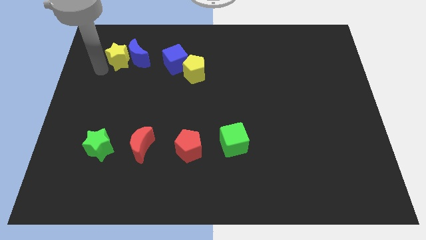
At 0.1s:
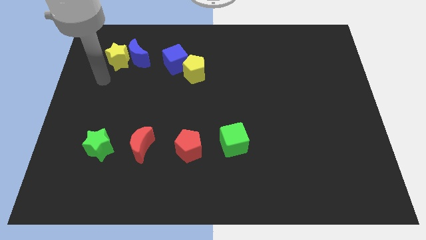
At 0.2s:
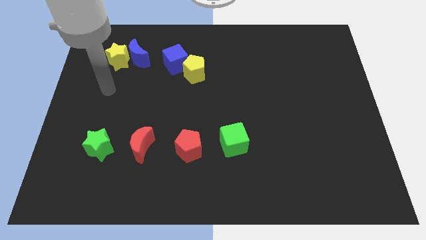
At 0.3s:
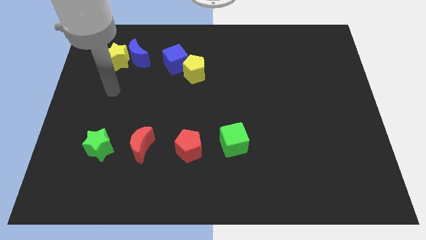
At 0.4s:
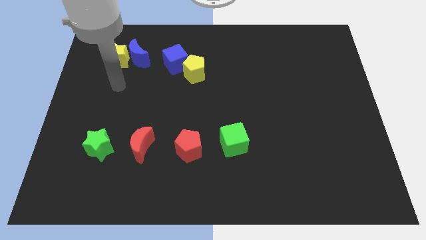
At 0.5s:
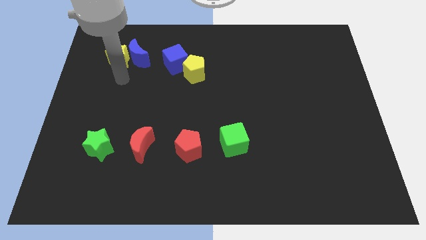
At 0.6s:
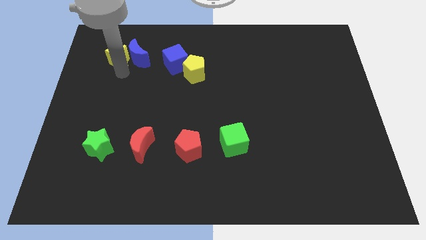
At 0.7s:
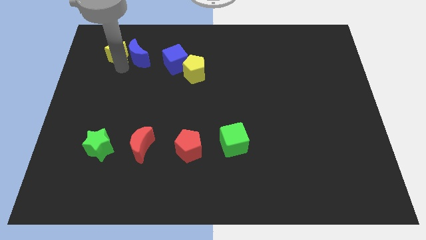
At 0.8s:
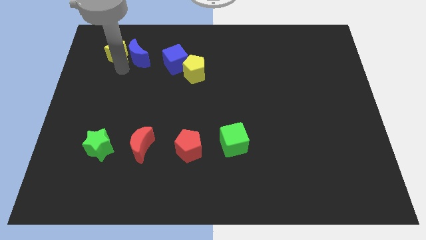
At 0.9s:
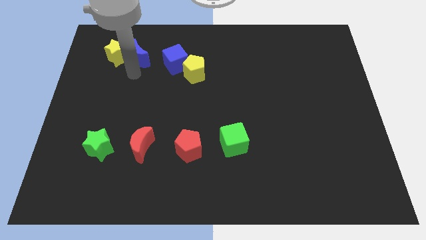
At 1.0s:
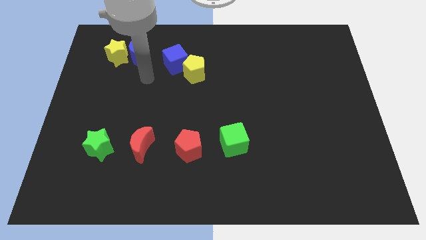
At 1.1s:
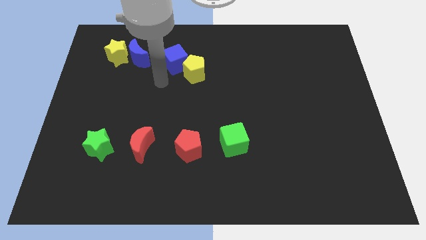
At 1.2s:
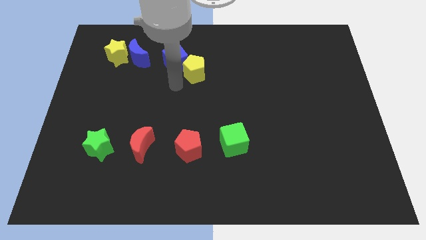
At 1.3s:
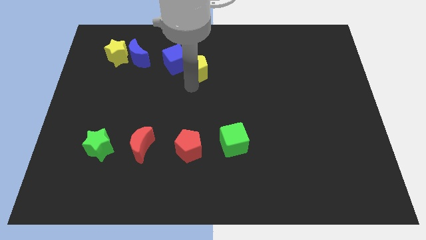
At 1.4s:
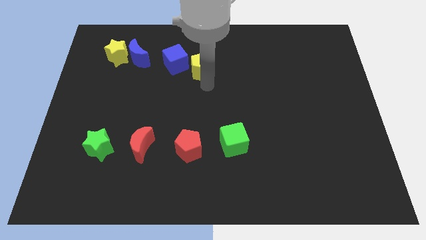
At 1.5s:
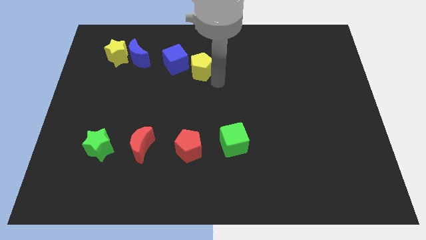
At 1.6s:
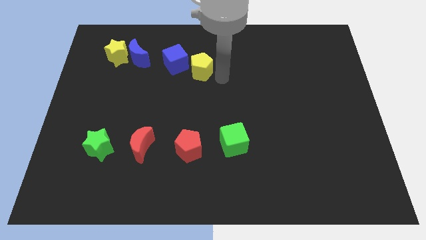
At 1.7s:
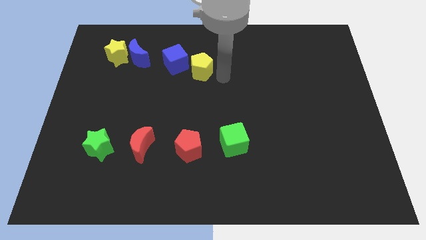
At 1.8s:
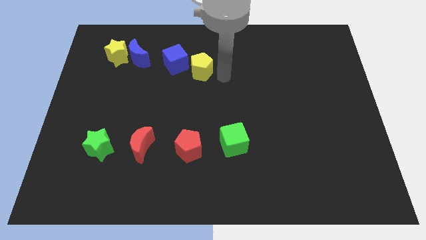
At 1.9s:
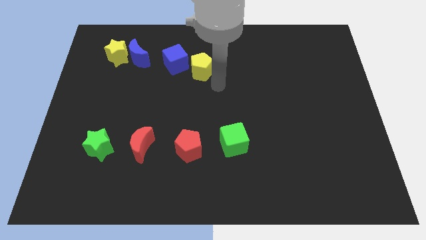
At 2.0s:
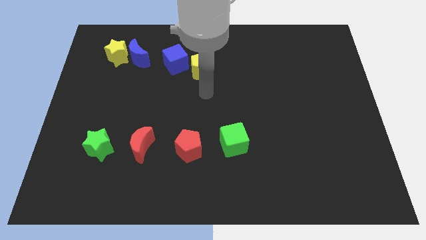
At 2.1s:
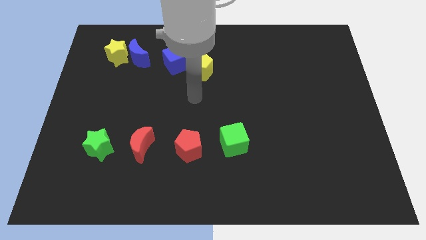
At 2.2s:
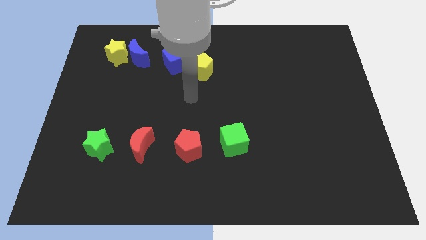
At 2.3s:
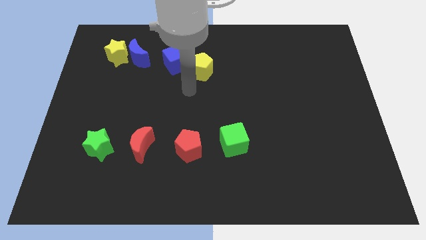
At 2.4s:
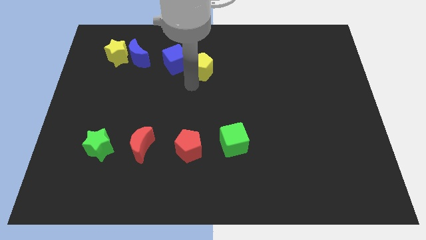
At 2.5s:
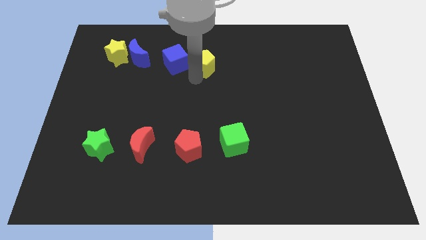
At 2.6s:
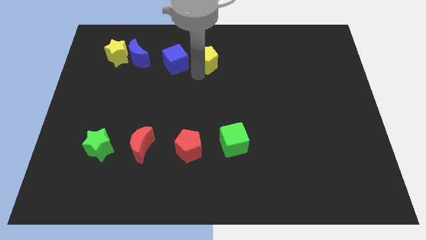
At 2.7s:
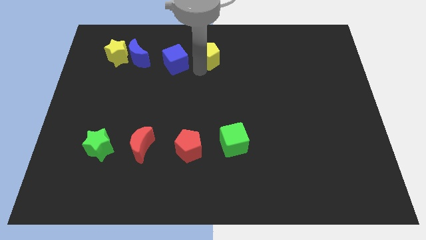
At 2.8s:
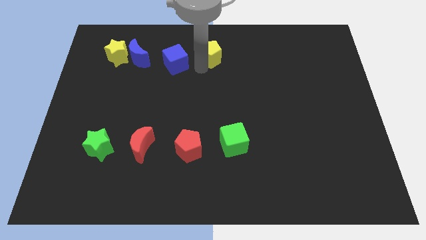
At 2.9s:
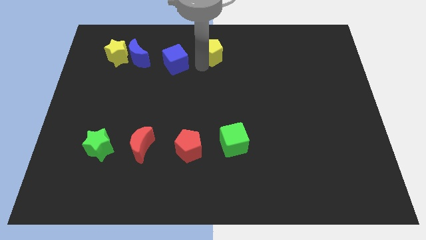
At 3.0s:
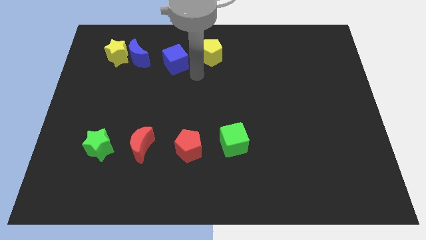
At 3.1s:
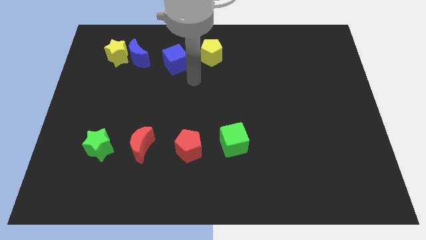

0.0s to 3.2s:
adjust the yellow blocks to form a horizontal line

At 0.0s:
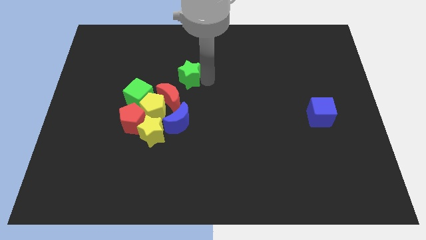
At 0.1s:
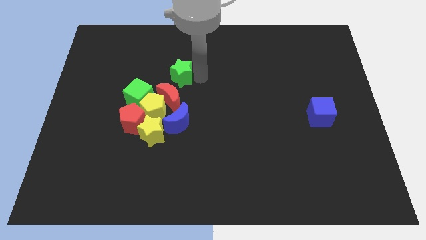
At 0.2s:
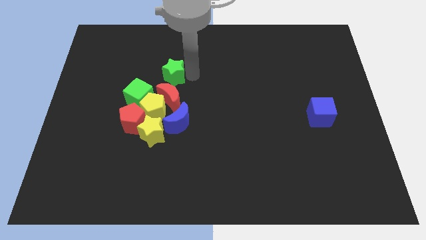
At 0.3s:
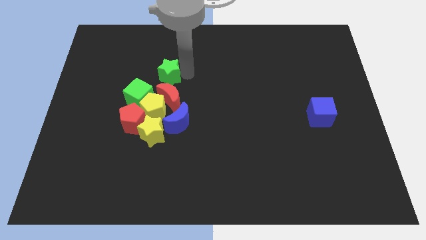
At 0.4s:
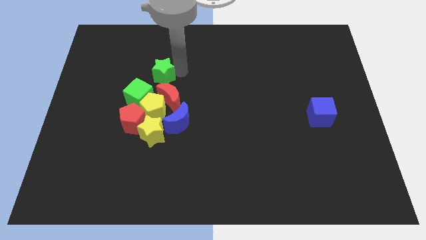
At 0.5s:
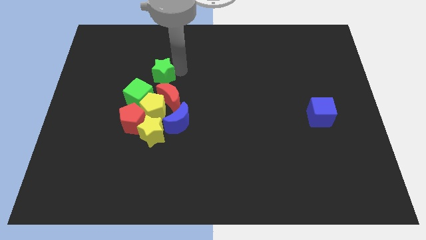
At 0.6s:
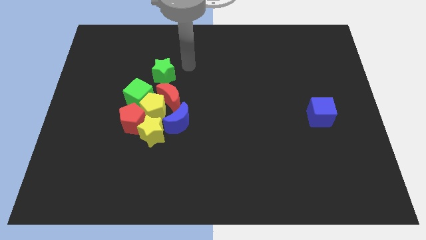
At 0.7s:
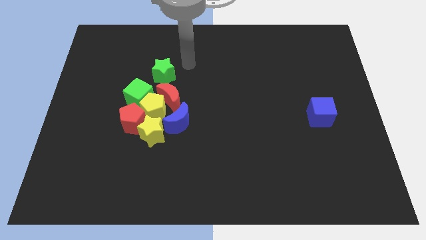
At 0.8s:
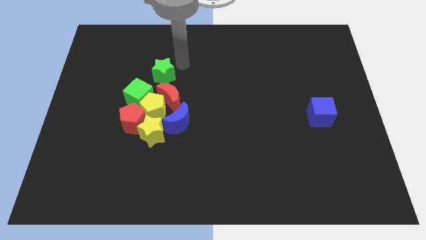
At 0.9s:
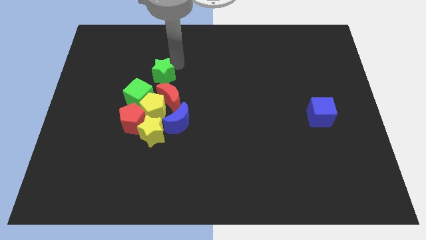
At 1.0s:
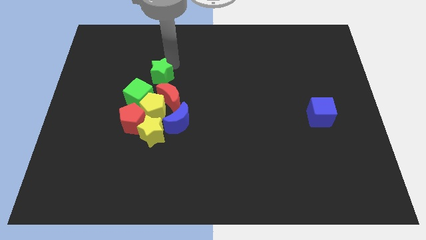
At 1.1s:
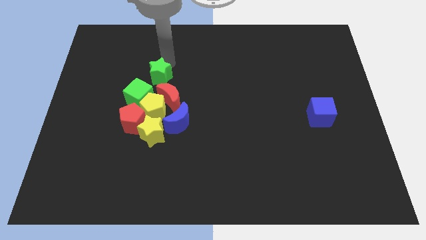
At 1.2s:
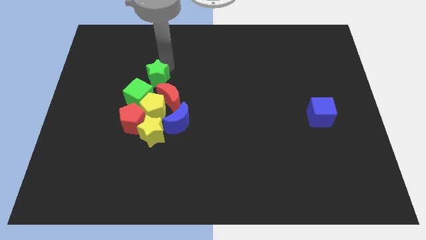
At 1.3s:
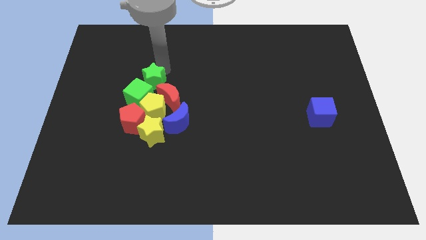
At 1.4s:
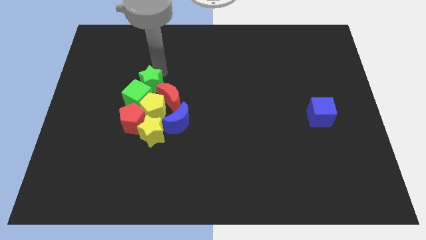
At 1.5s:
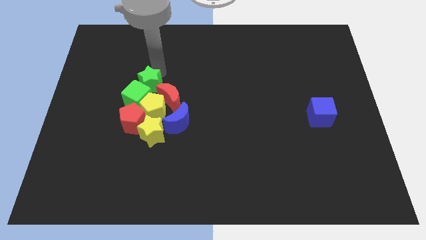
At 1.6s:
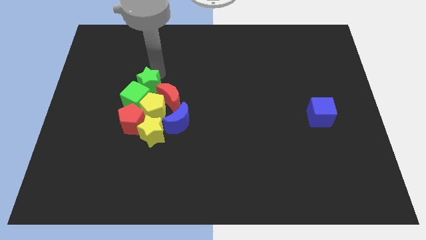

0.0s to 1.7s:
place the green star above the green cube

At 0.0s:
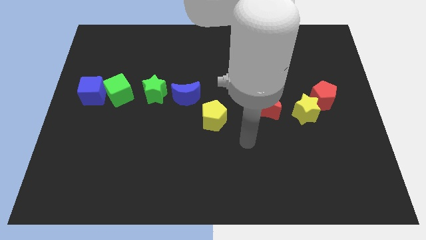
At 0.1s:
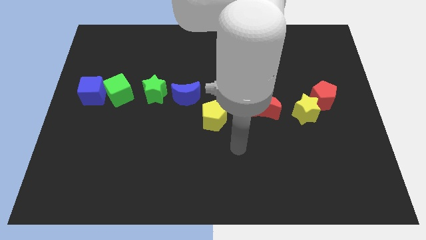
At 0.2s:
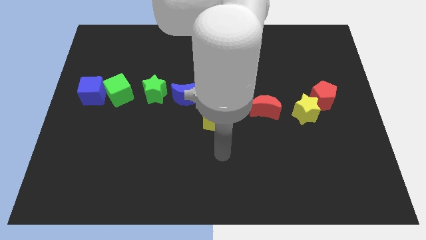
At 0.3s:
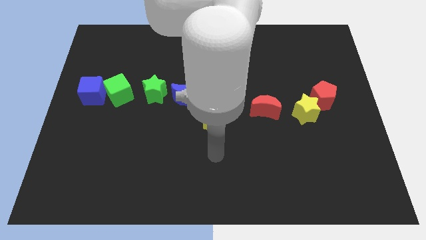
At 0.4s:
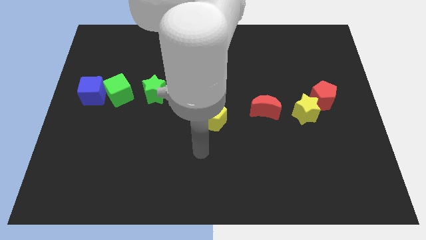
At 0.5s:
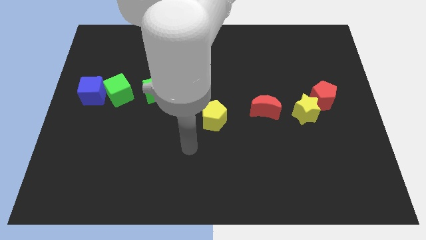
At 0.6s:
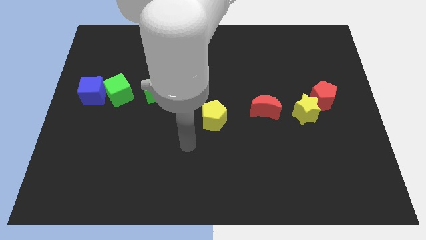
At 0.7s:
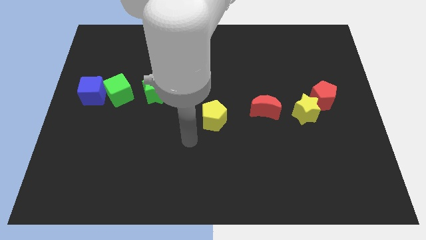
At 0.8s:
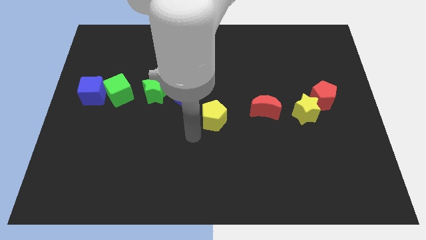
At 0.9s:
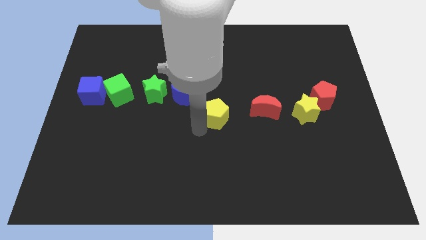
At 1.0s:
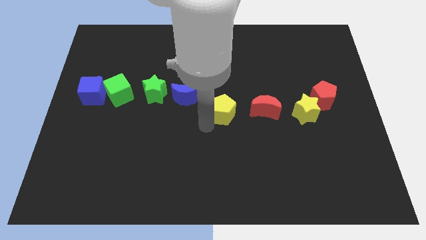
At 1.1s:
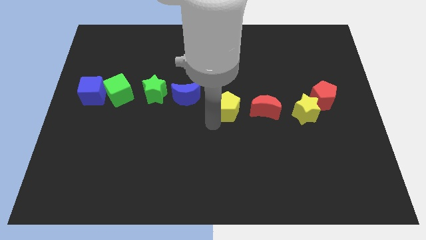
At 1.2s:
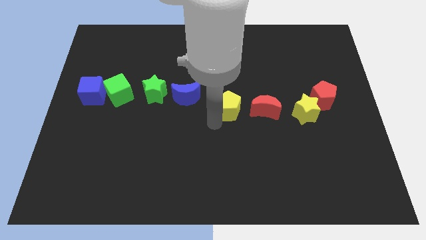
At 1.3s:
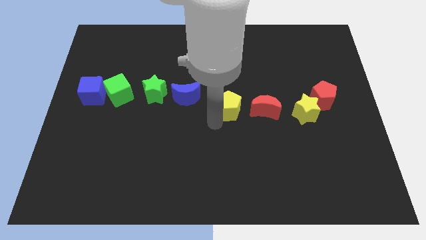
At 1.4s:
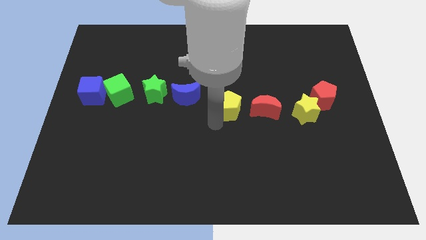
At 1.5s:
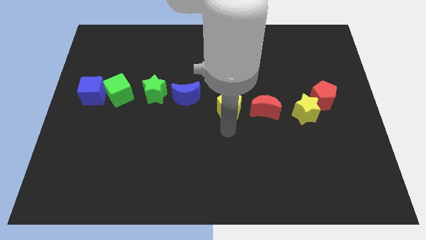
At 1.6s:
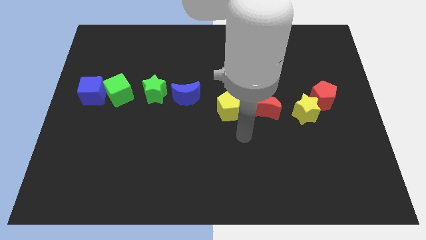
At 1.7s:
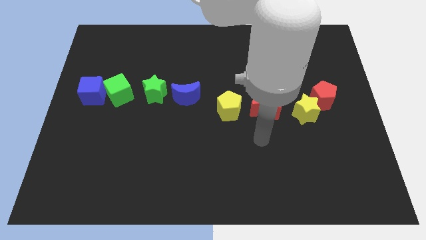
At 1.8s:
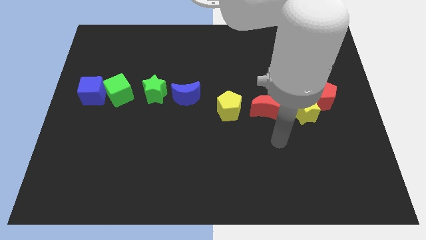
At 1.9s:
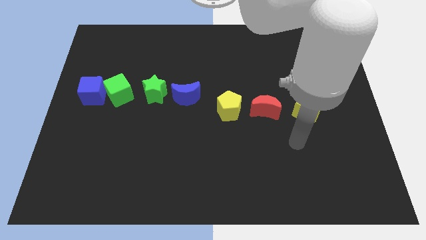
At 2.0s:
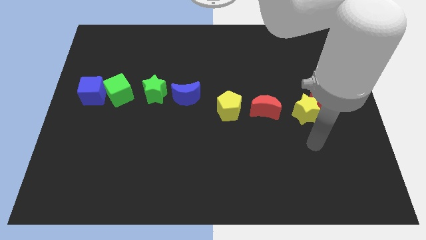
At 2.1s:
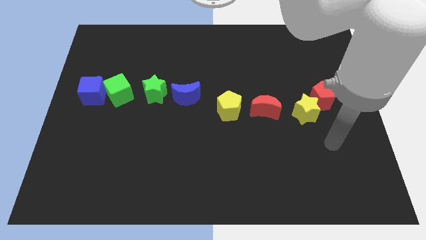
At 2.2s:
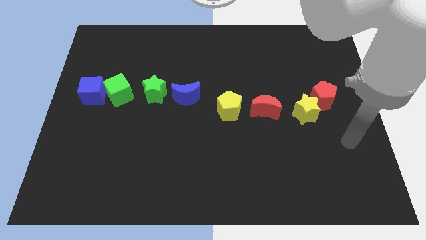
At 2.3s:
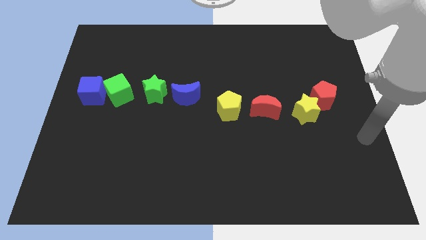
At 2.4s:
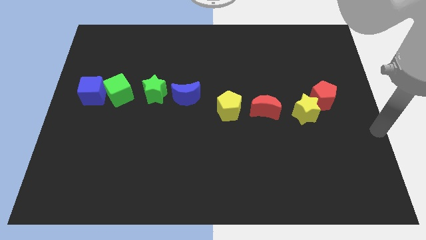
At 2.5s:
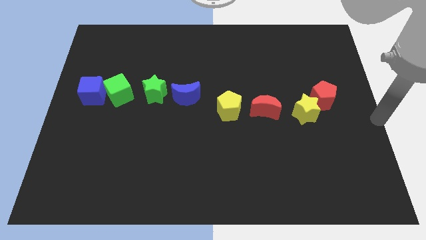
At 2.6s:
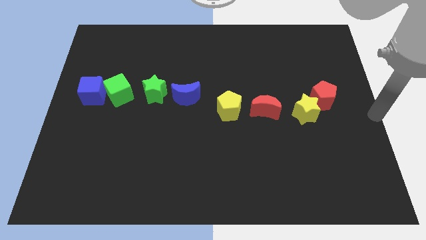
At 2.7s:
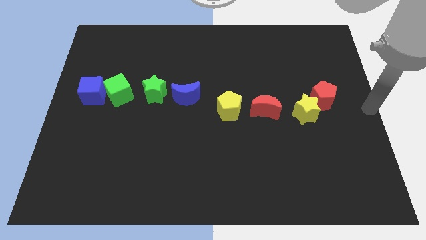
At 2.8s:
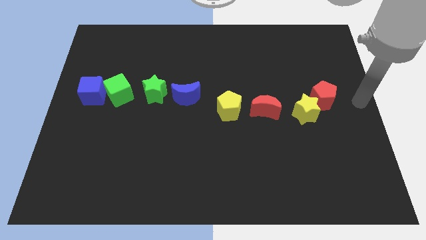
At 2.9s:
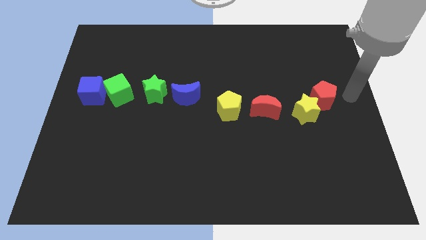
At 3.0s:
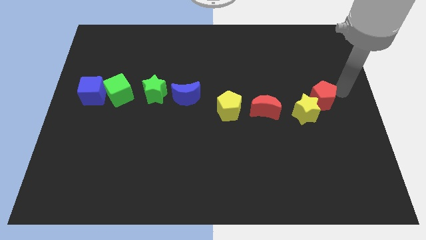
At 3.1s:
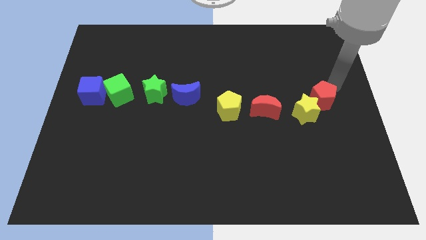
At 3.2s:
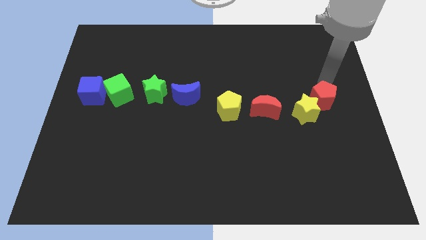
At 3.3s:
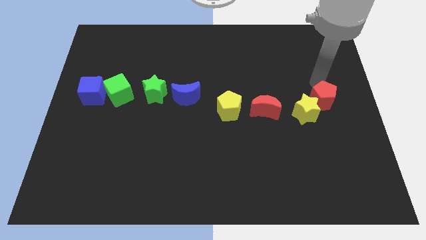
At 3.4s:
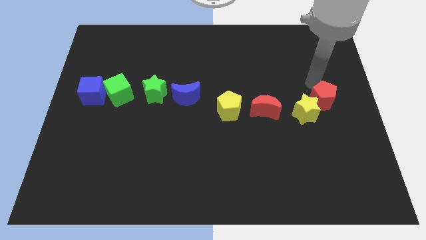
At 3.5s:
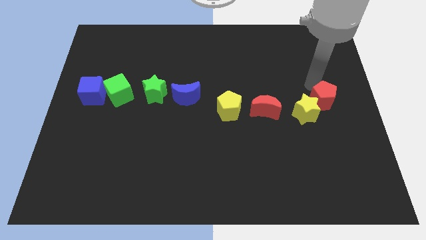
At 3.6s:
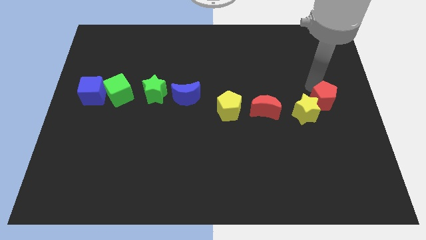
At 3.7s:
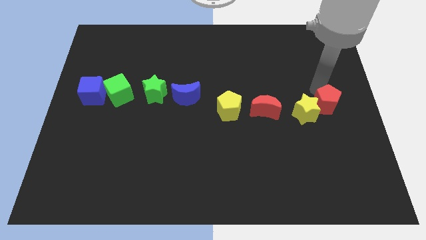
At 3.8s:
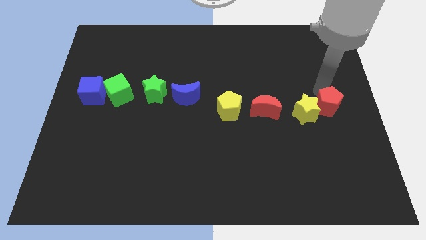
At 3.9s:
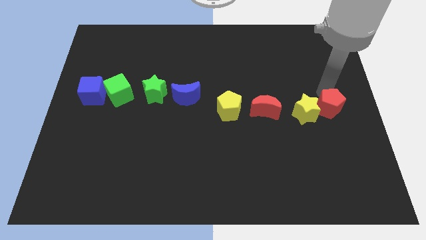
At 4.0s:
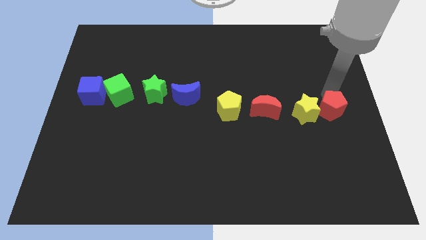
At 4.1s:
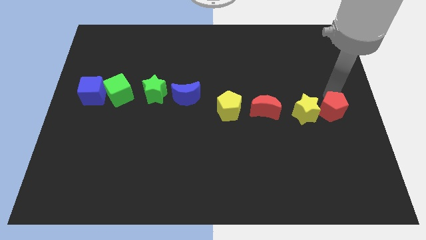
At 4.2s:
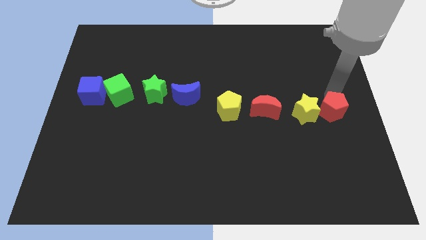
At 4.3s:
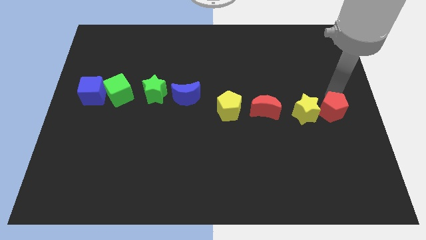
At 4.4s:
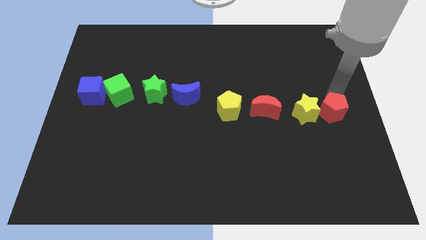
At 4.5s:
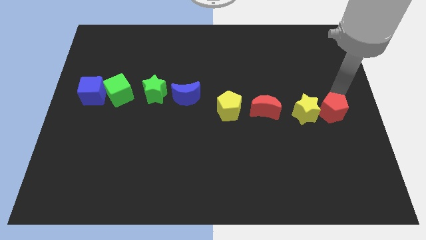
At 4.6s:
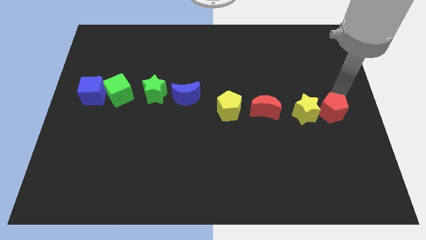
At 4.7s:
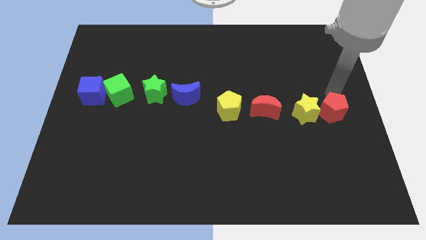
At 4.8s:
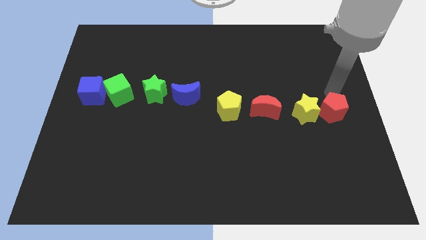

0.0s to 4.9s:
adjust the yellow pentagon and the red pentagon to form a horizontal line
